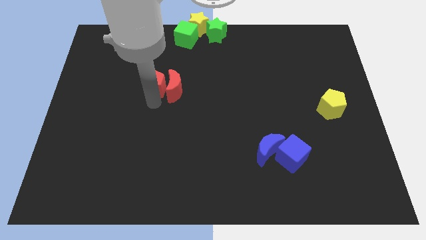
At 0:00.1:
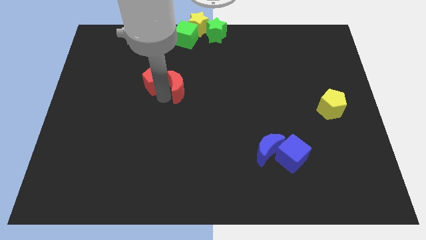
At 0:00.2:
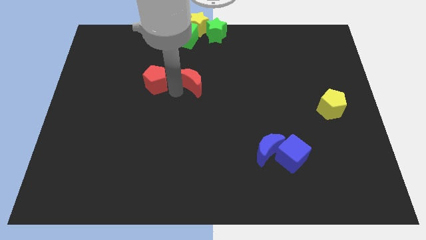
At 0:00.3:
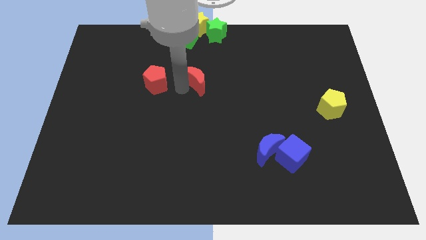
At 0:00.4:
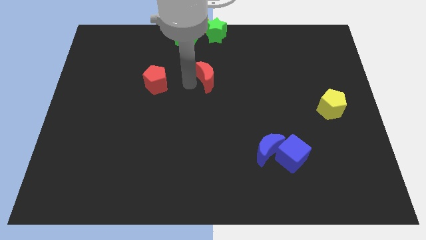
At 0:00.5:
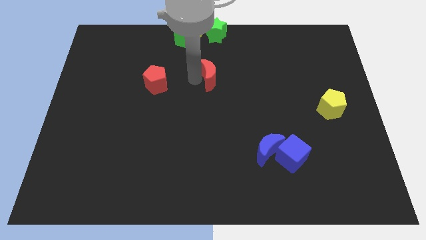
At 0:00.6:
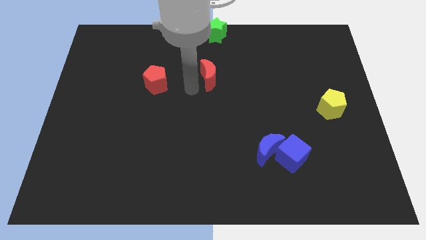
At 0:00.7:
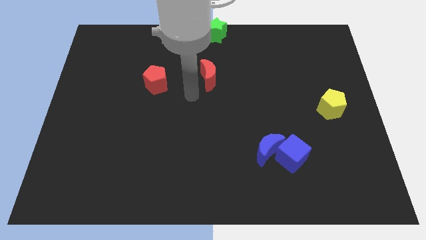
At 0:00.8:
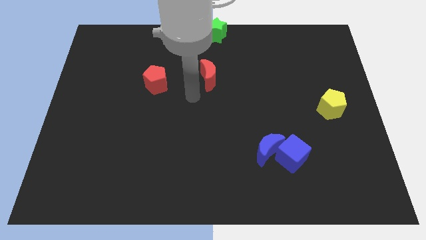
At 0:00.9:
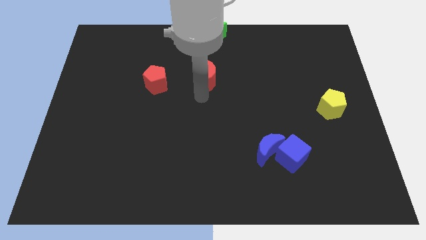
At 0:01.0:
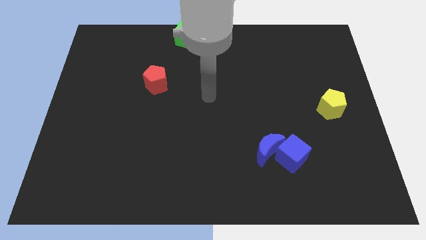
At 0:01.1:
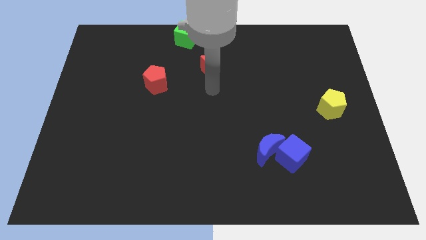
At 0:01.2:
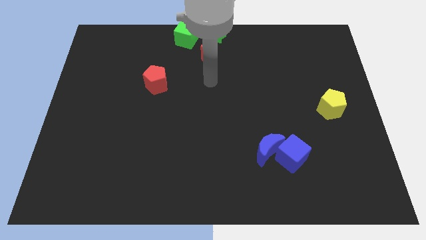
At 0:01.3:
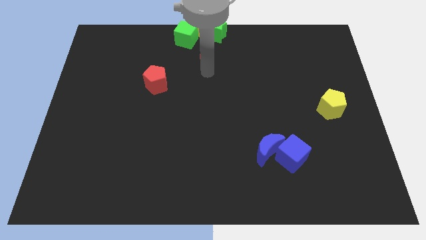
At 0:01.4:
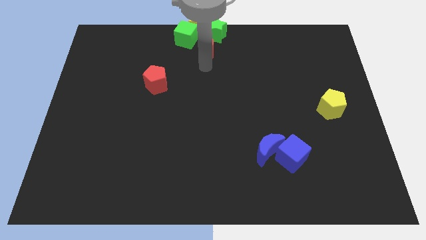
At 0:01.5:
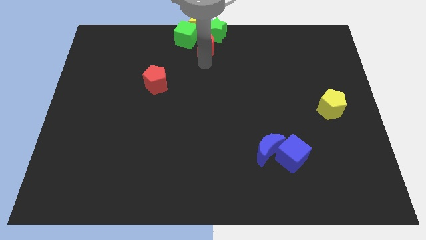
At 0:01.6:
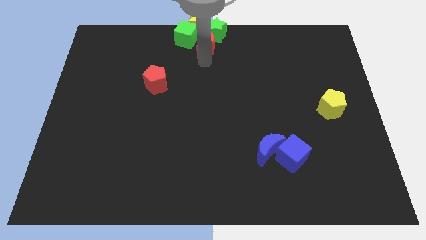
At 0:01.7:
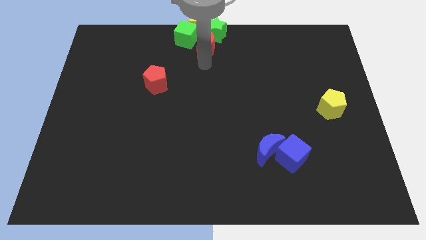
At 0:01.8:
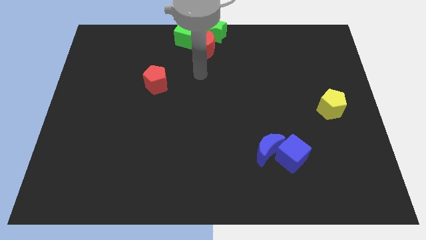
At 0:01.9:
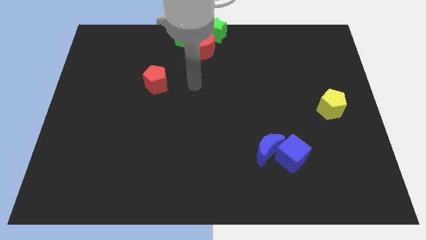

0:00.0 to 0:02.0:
push the red moon into the group of objects at the top center corner

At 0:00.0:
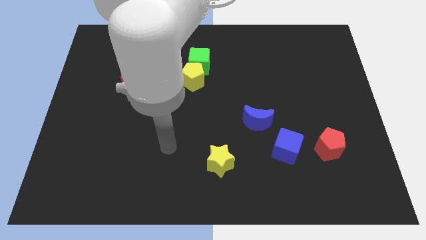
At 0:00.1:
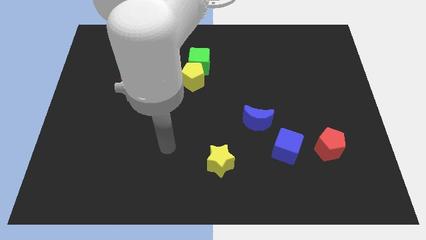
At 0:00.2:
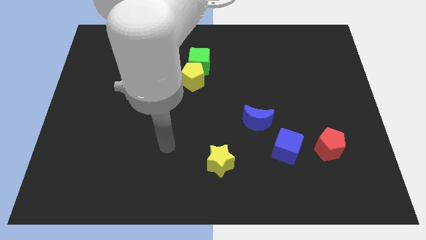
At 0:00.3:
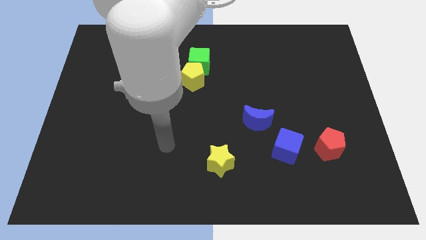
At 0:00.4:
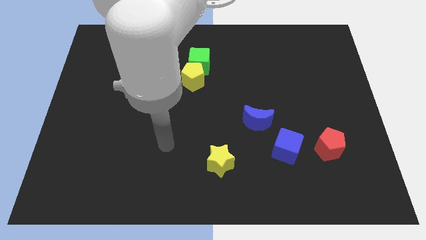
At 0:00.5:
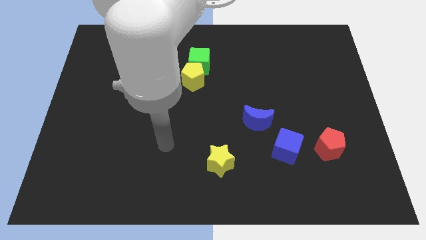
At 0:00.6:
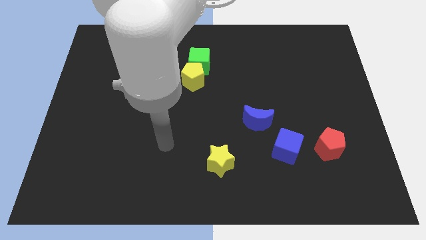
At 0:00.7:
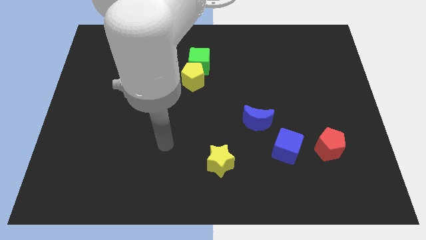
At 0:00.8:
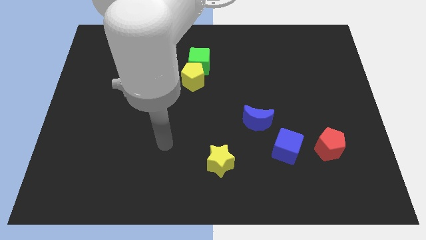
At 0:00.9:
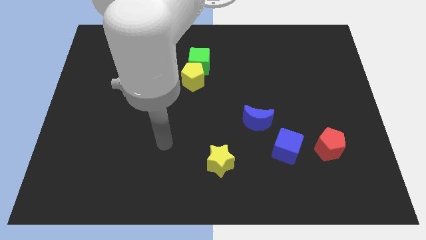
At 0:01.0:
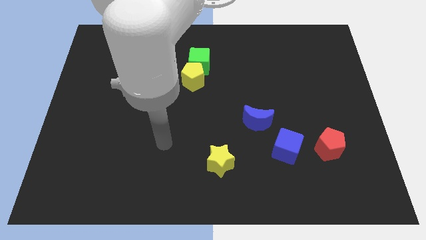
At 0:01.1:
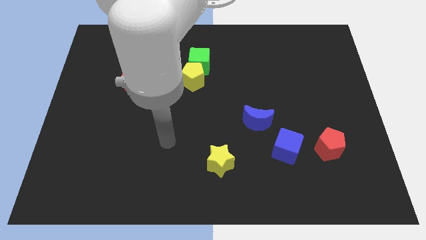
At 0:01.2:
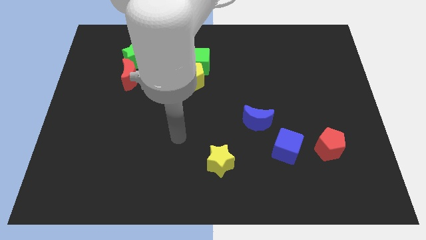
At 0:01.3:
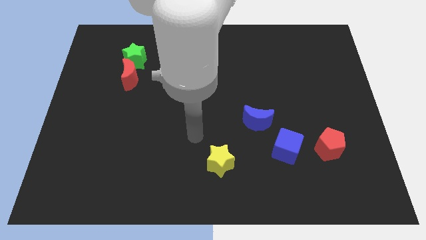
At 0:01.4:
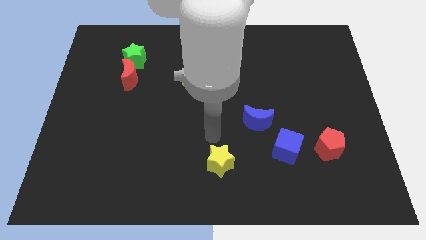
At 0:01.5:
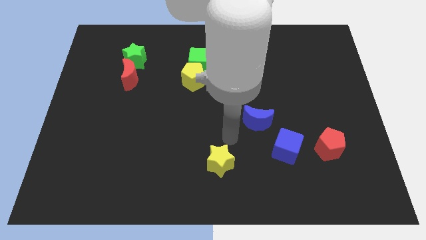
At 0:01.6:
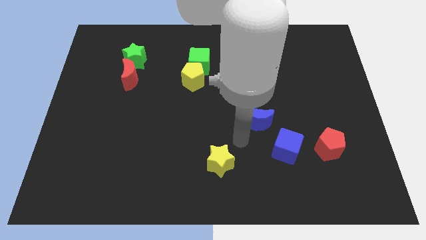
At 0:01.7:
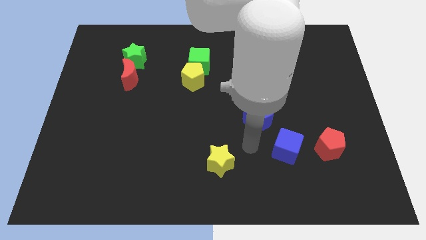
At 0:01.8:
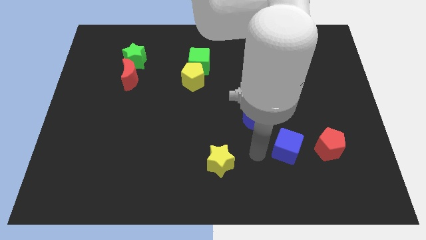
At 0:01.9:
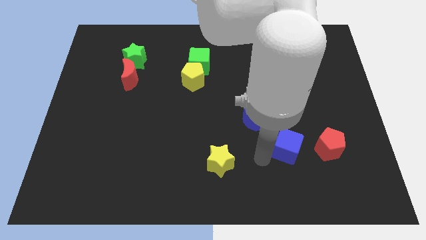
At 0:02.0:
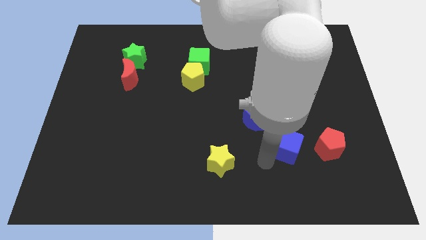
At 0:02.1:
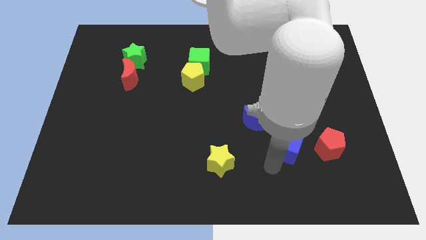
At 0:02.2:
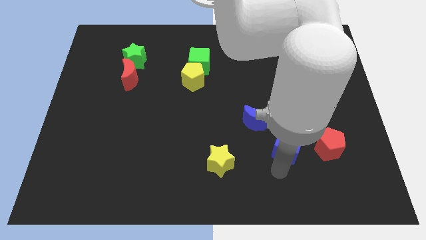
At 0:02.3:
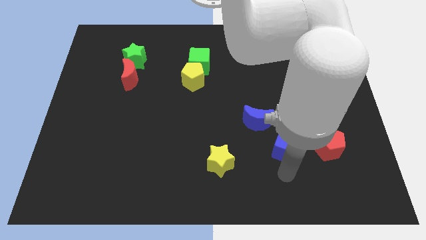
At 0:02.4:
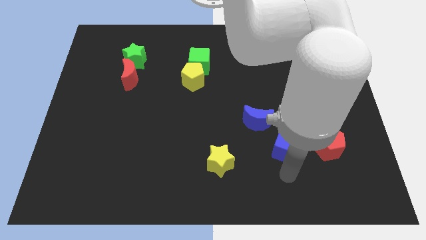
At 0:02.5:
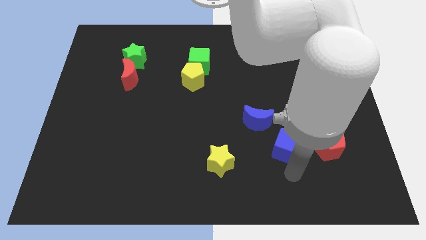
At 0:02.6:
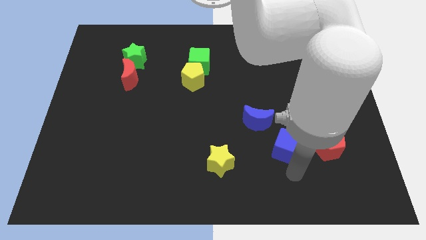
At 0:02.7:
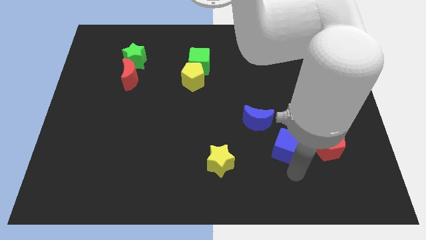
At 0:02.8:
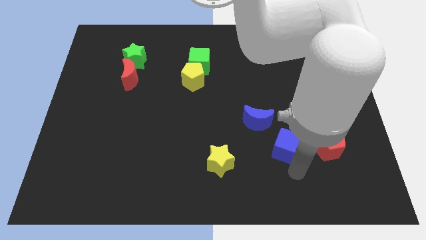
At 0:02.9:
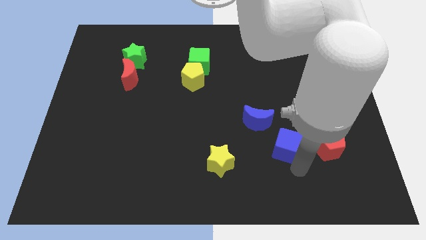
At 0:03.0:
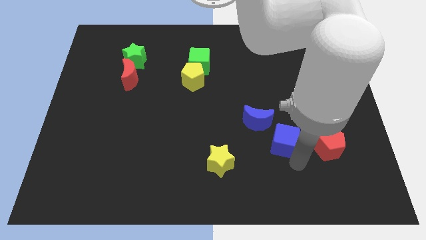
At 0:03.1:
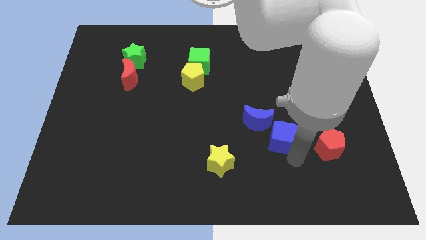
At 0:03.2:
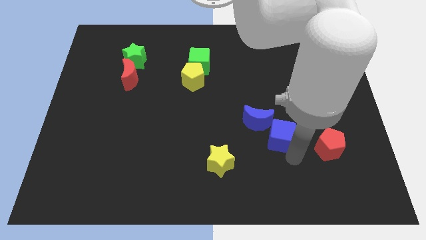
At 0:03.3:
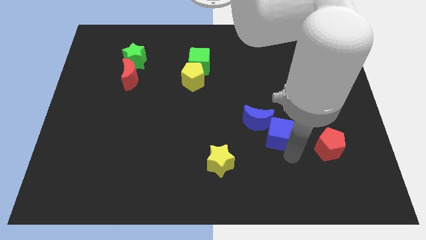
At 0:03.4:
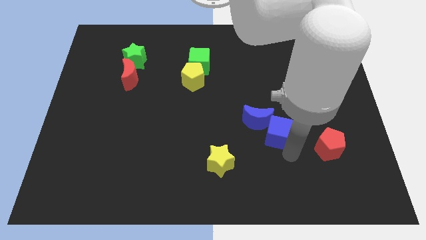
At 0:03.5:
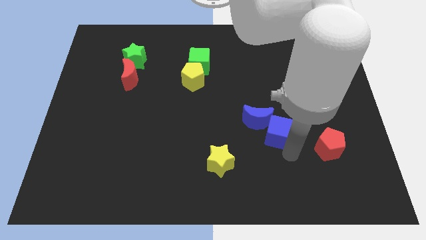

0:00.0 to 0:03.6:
group up the blue blocks at the top right side of the yellow star

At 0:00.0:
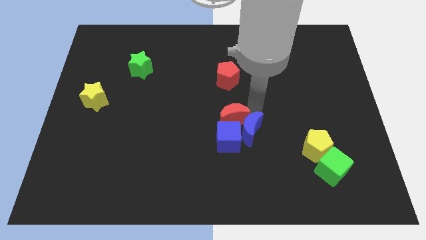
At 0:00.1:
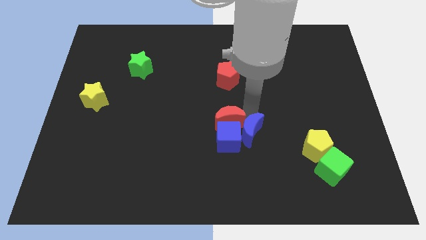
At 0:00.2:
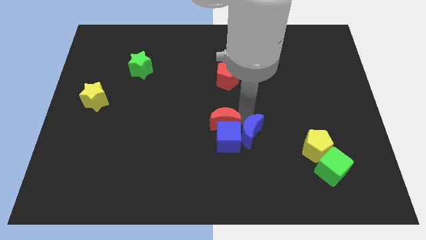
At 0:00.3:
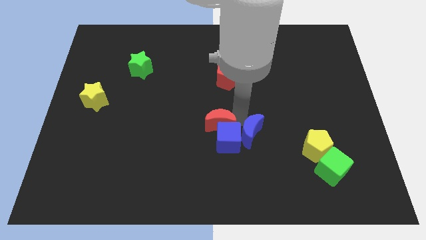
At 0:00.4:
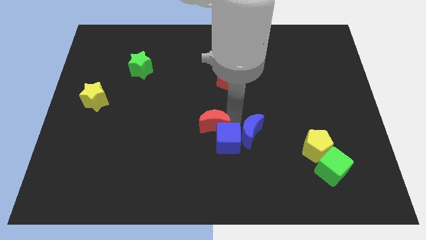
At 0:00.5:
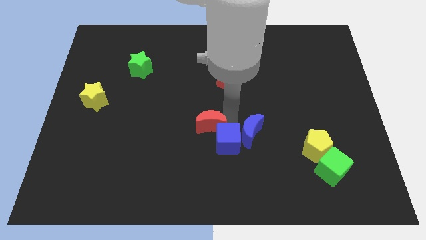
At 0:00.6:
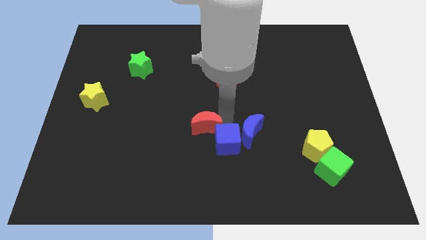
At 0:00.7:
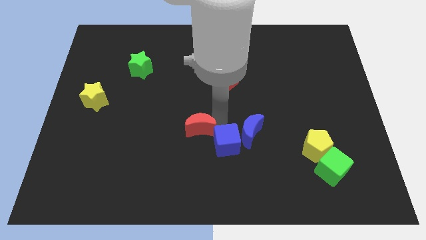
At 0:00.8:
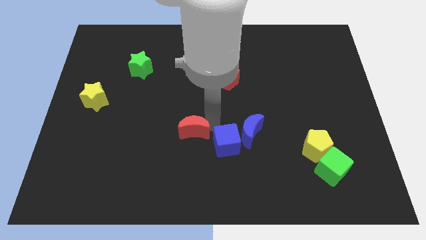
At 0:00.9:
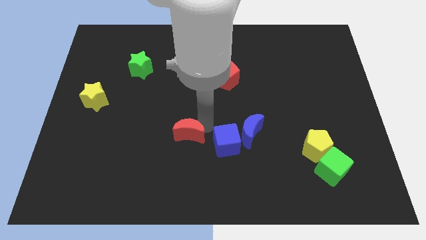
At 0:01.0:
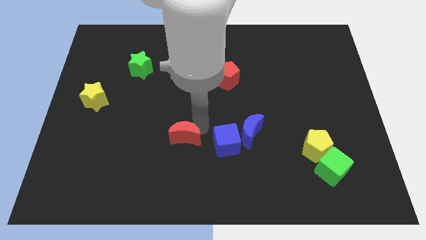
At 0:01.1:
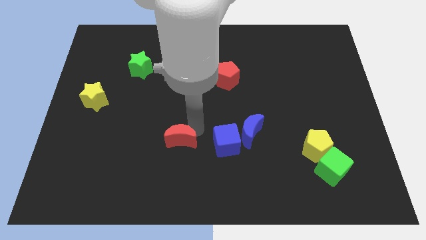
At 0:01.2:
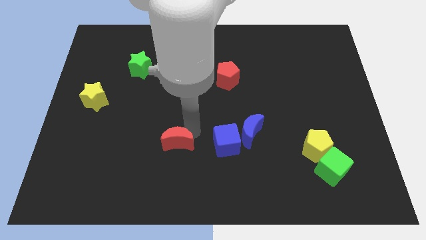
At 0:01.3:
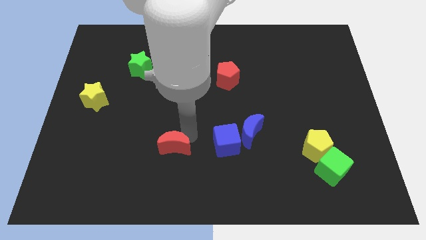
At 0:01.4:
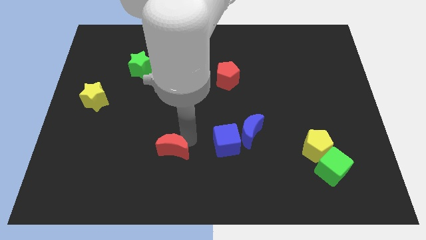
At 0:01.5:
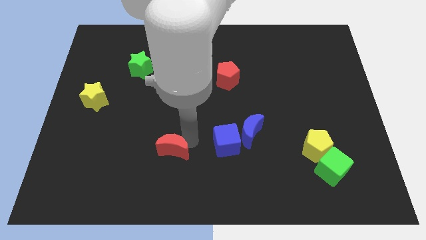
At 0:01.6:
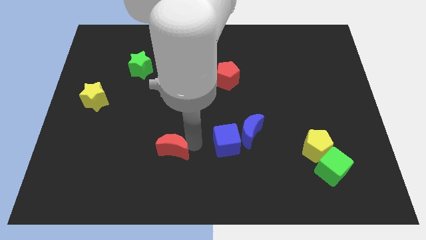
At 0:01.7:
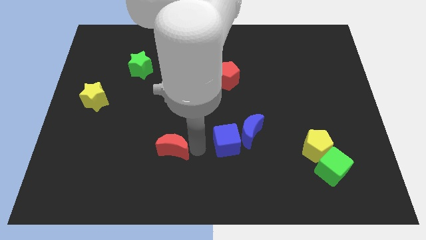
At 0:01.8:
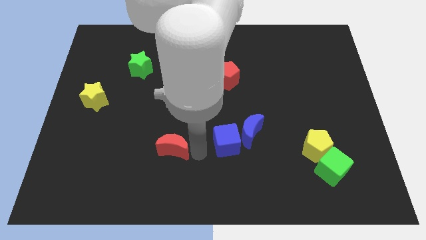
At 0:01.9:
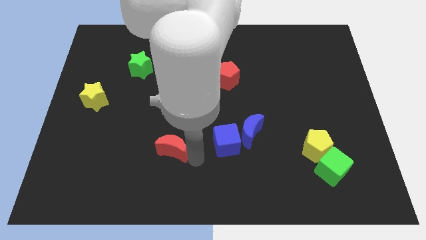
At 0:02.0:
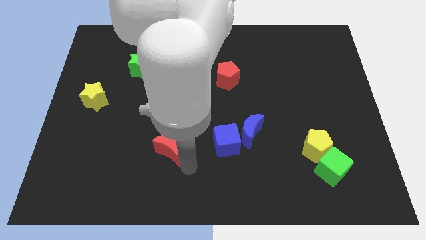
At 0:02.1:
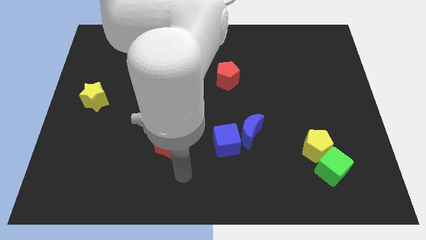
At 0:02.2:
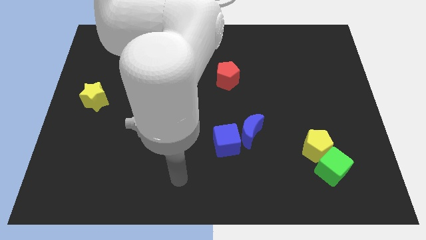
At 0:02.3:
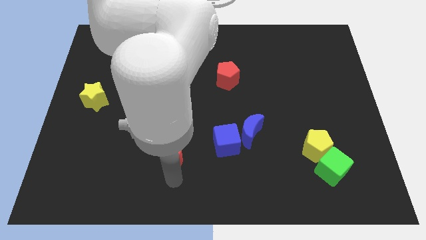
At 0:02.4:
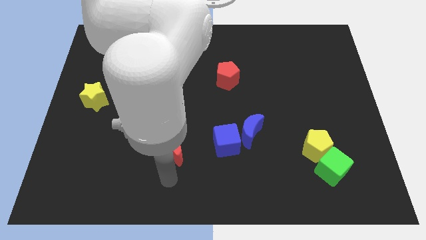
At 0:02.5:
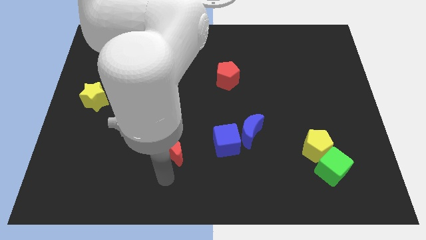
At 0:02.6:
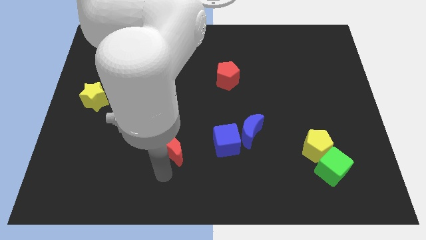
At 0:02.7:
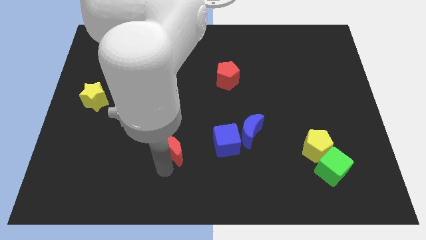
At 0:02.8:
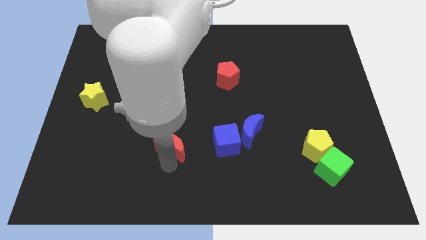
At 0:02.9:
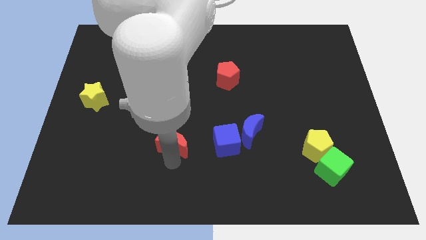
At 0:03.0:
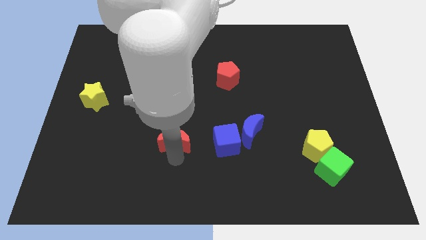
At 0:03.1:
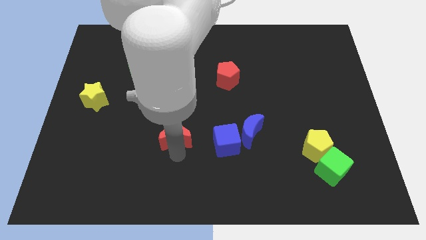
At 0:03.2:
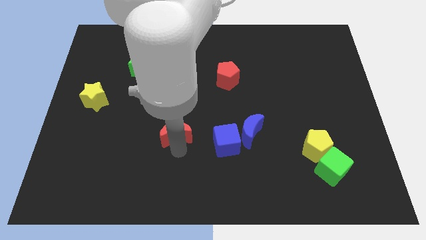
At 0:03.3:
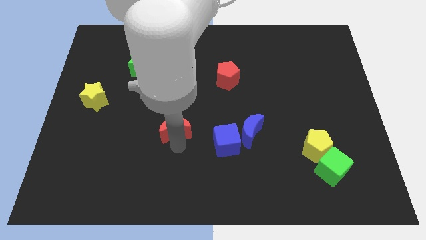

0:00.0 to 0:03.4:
move the red crescent left to the blue cube
